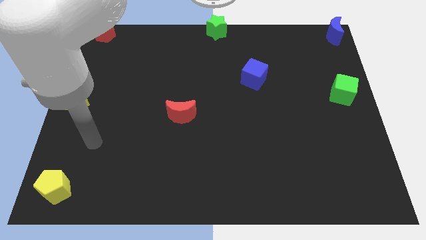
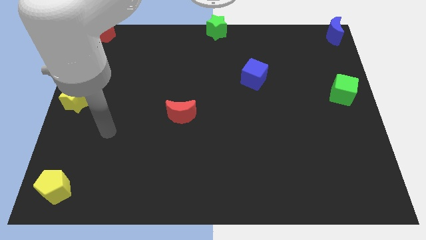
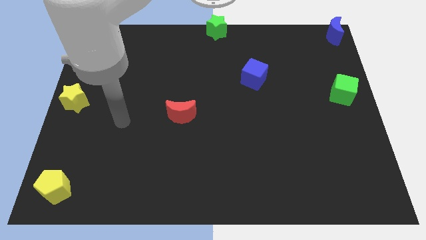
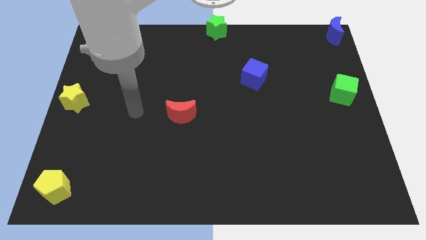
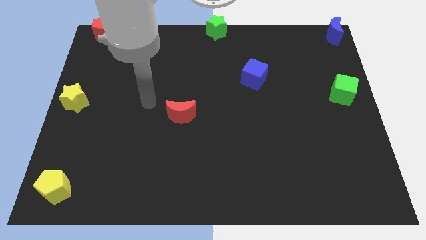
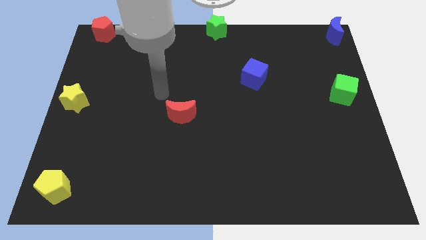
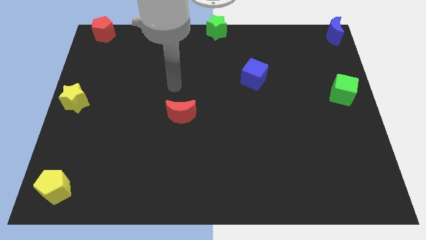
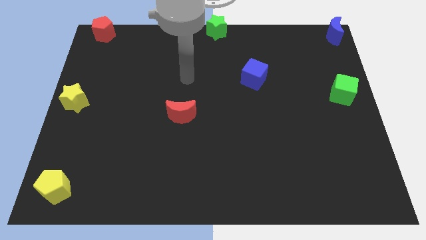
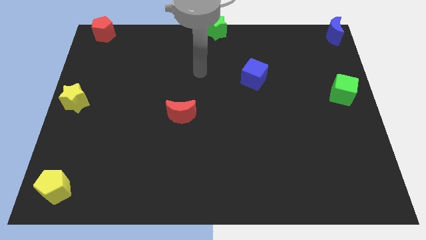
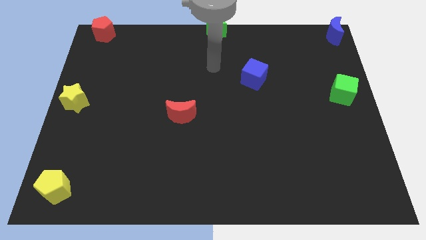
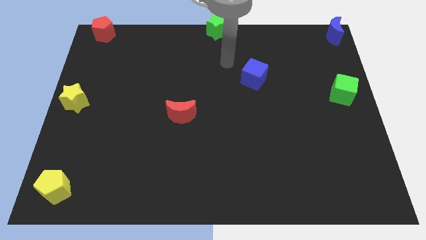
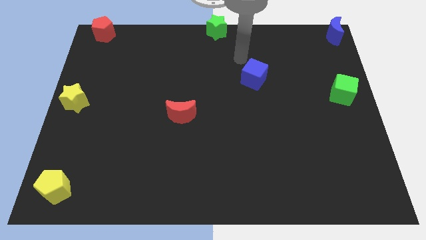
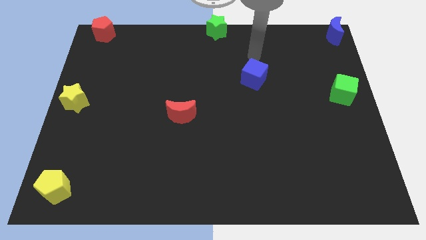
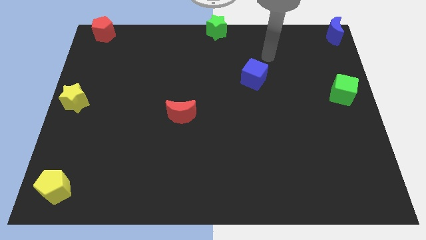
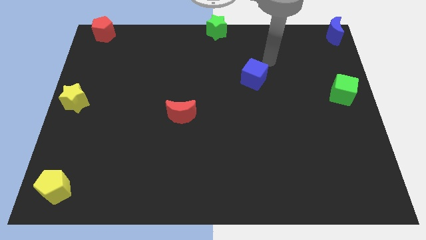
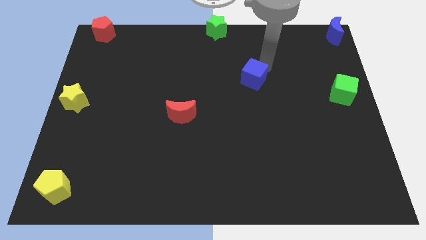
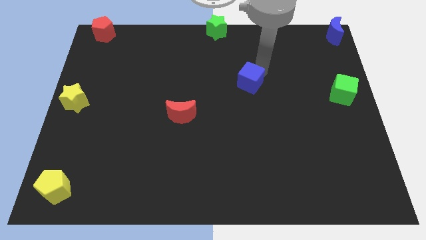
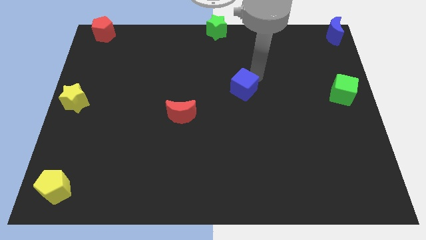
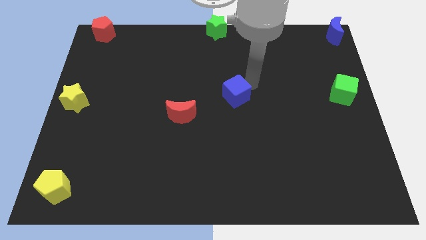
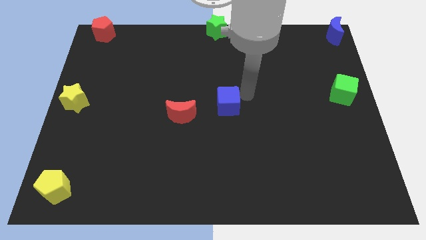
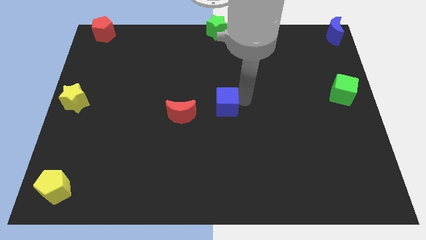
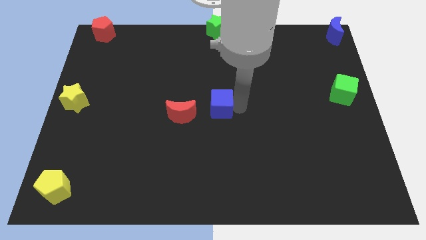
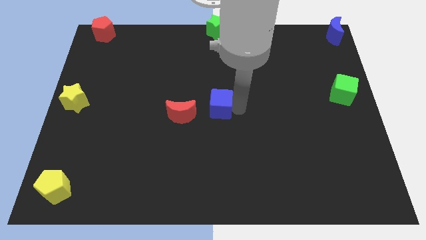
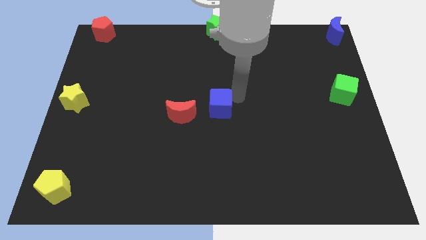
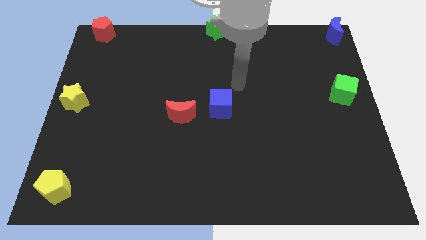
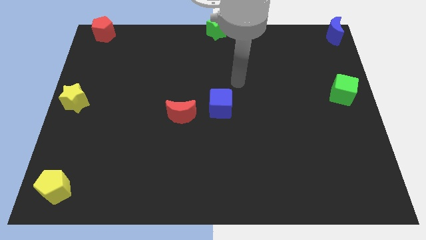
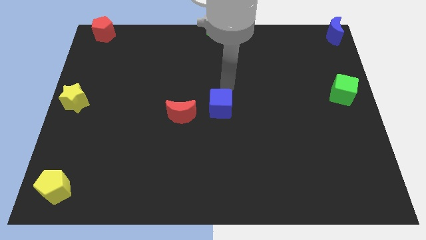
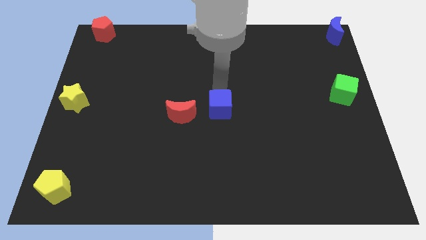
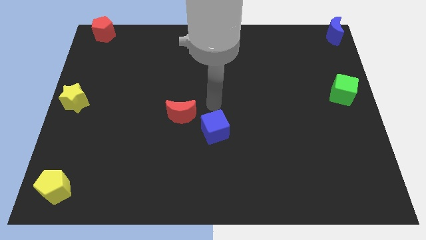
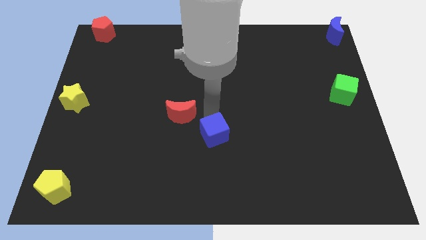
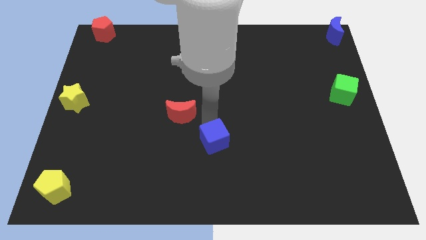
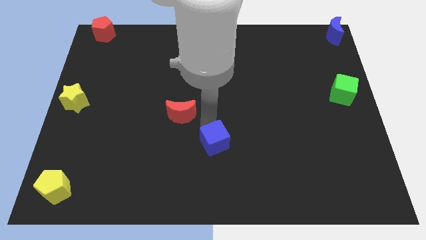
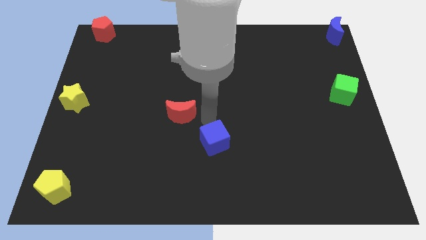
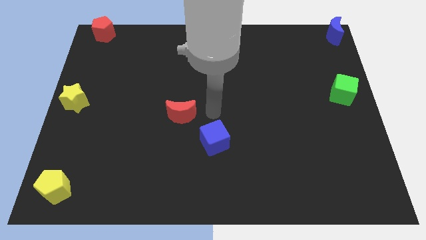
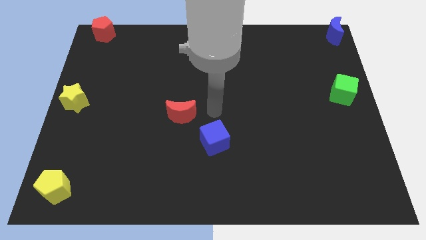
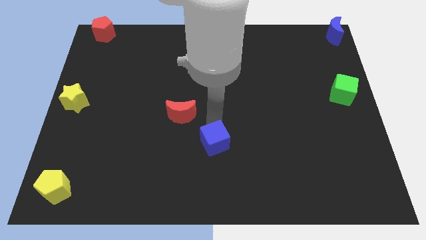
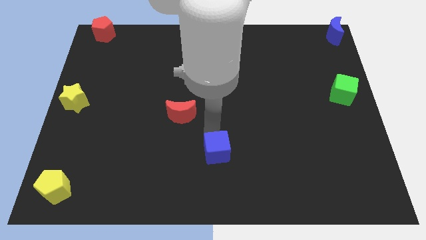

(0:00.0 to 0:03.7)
move the blue cube diagonally on the bottom right side of the red crescent

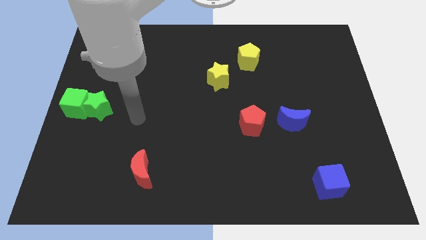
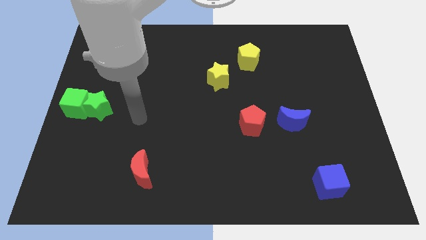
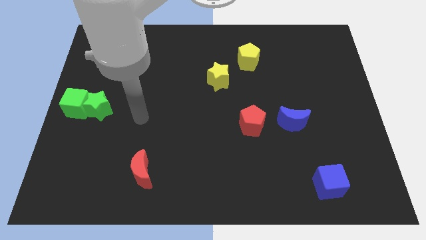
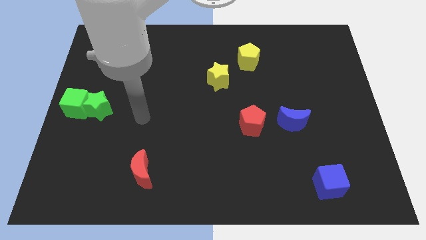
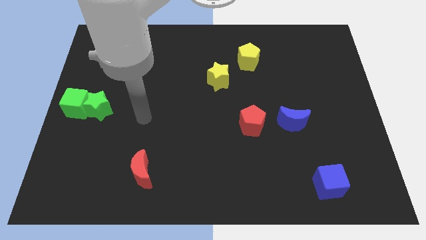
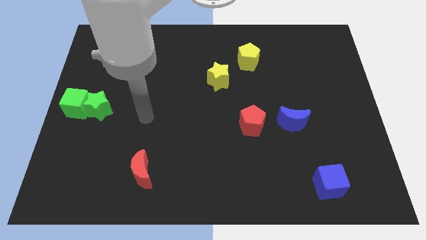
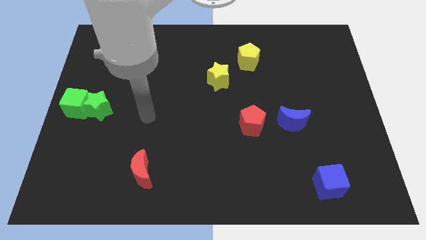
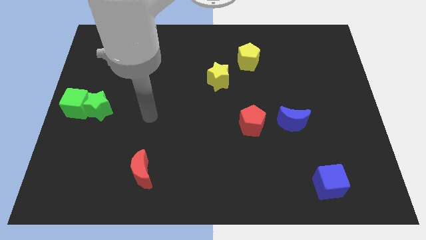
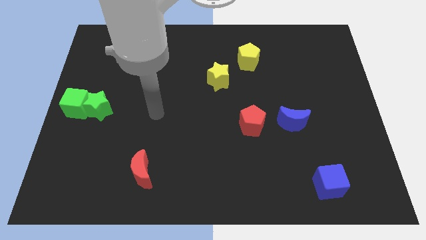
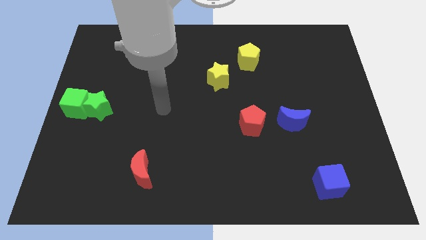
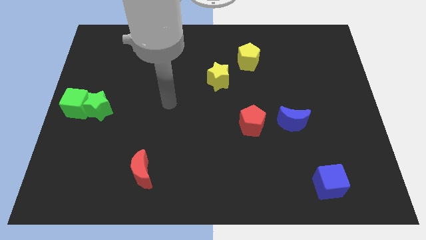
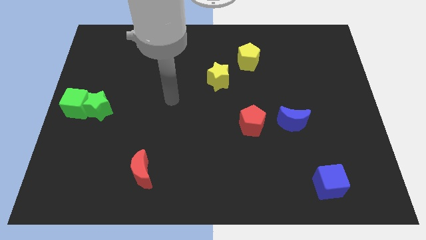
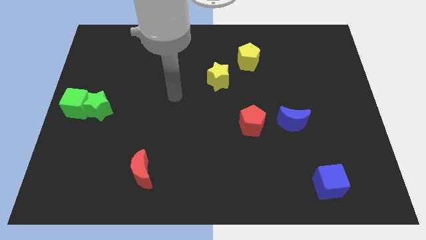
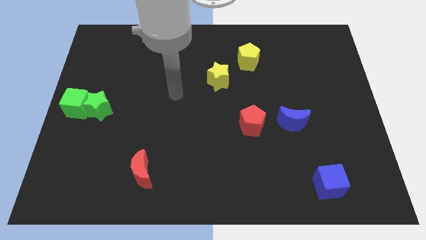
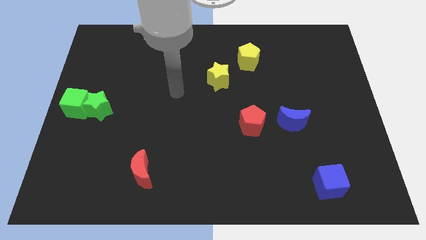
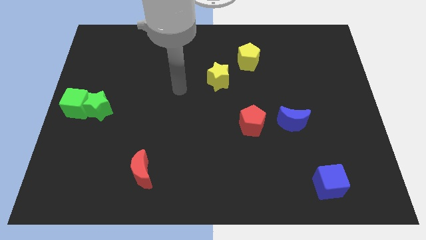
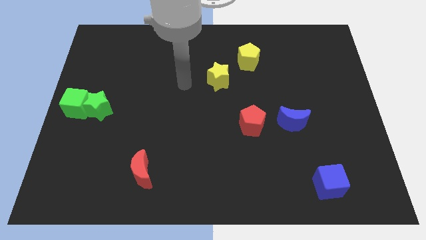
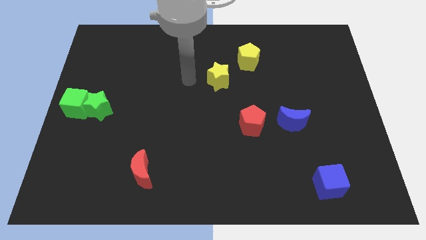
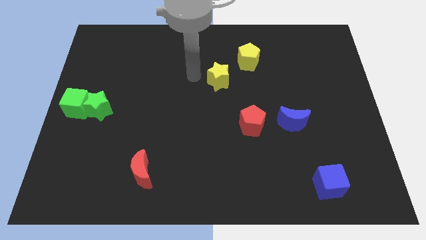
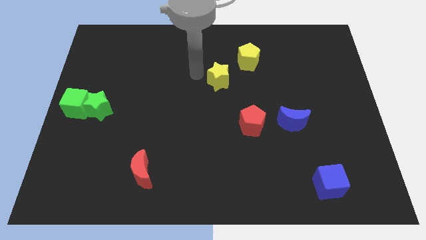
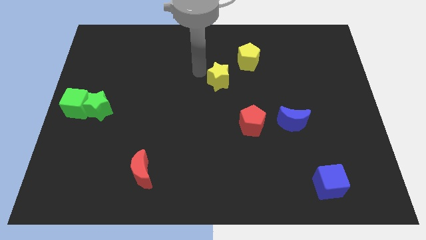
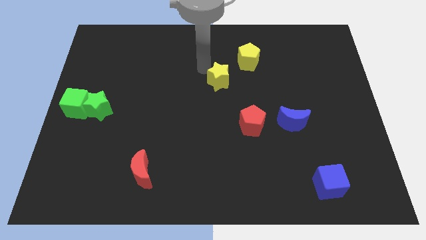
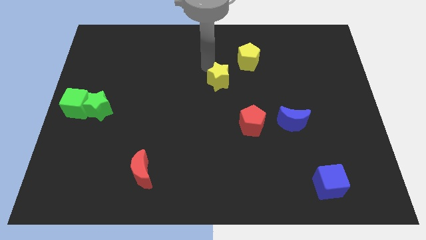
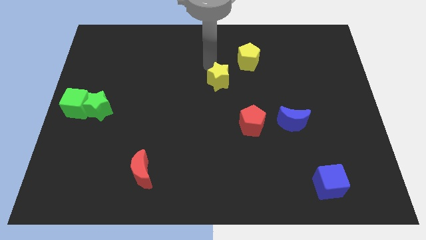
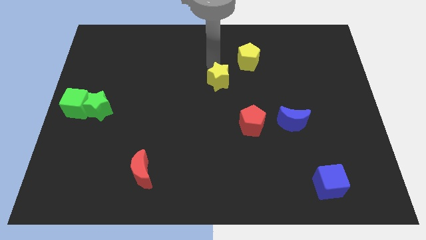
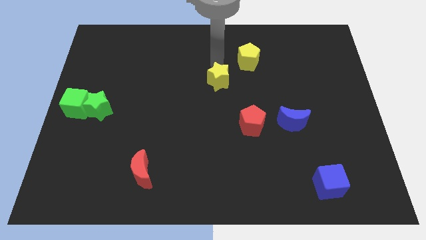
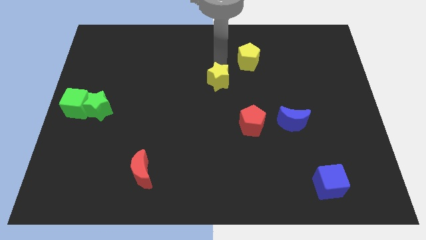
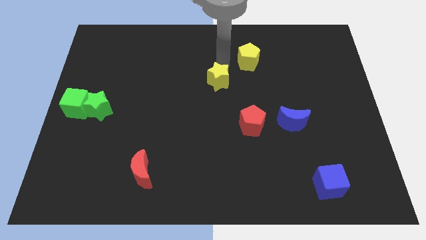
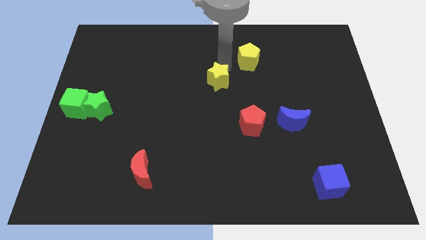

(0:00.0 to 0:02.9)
point your arm at the top side of the yellow star

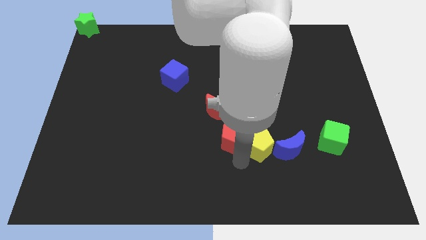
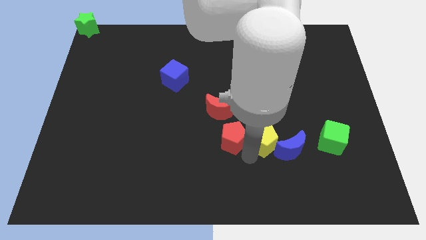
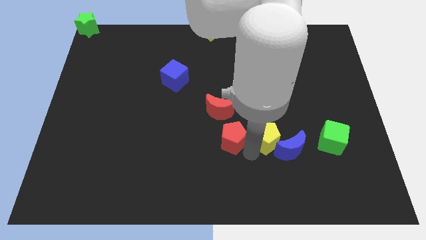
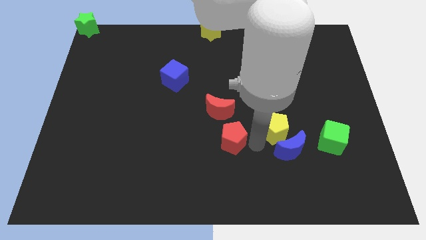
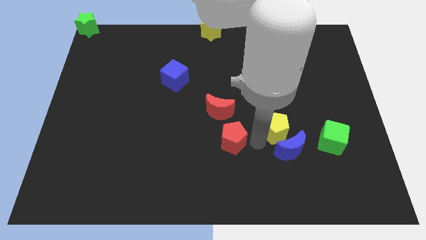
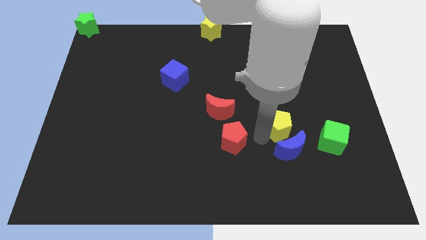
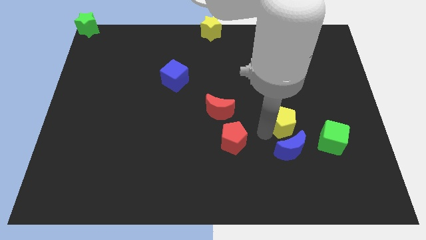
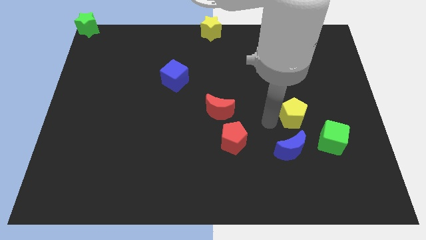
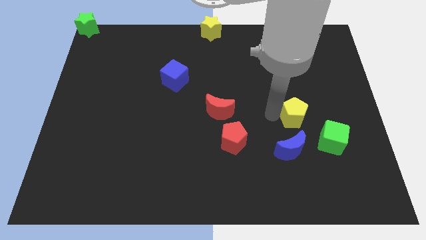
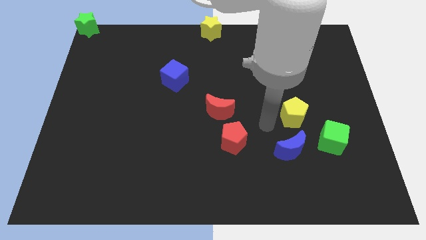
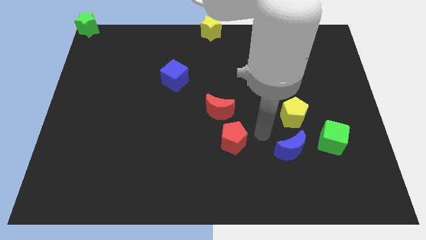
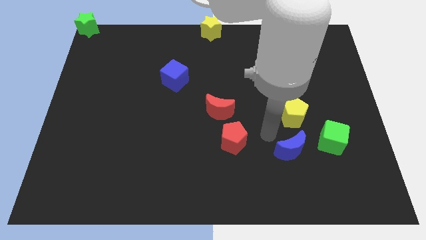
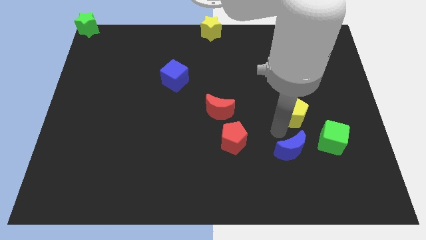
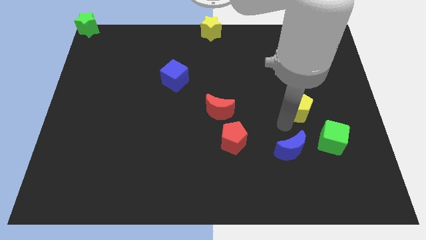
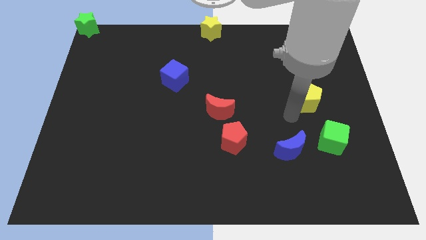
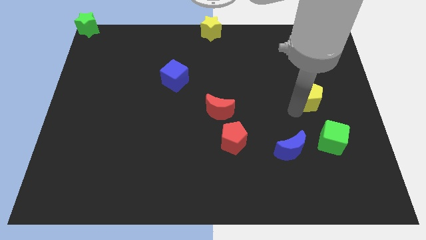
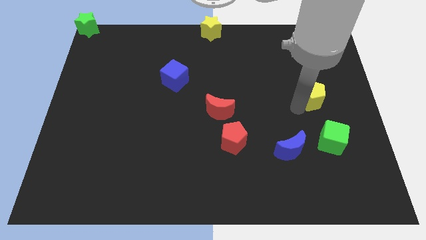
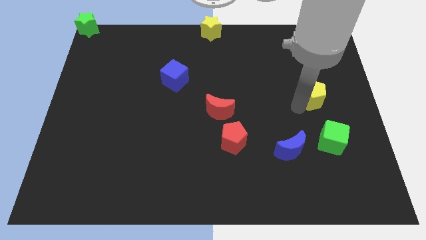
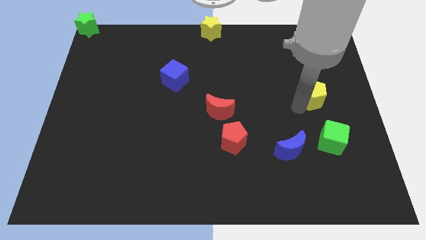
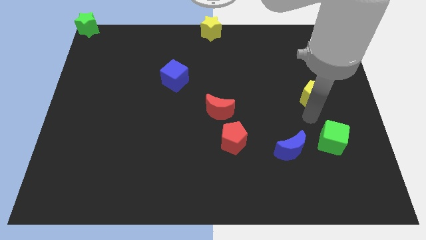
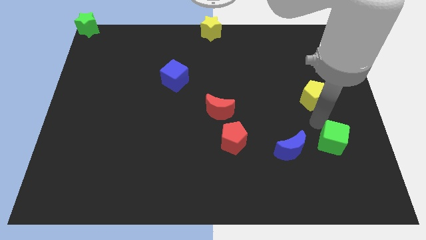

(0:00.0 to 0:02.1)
separate the yellow pentagon with red pentagon and blue crescent
